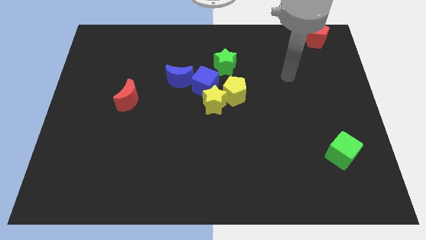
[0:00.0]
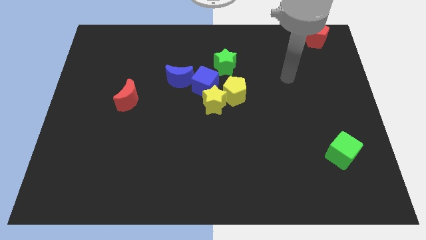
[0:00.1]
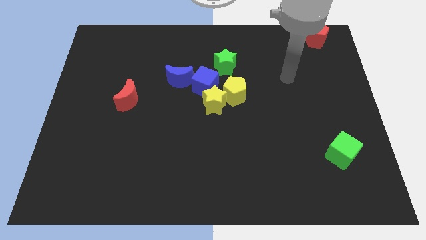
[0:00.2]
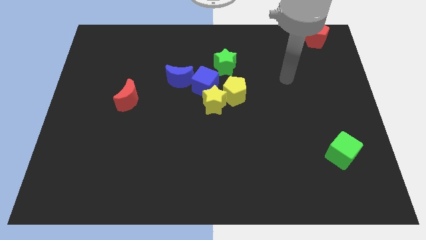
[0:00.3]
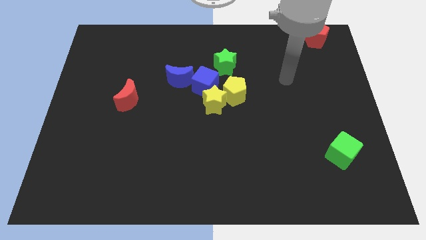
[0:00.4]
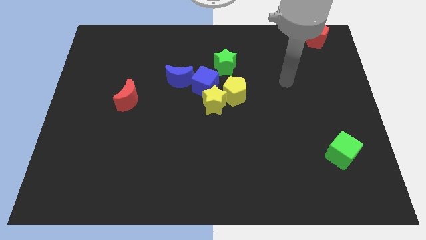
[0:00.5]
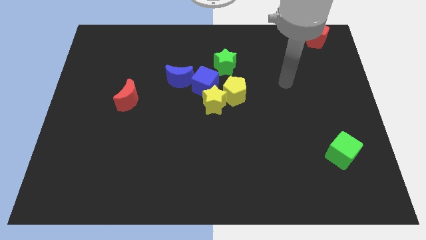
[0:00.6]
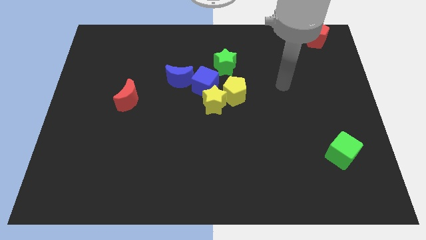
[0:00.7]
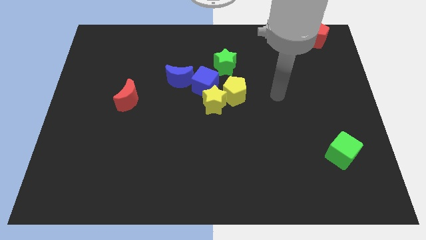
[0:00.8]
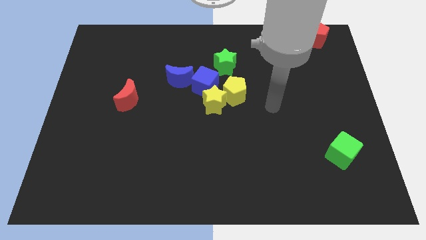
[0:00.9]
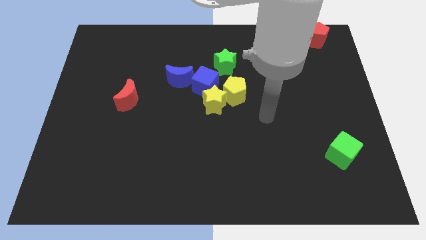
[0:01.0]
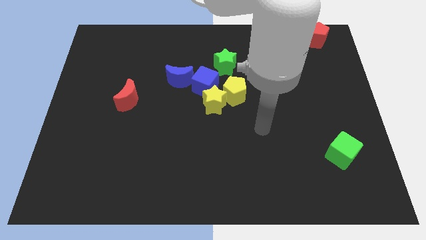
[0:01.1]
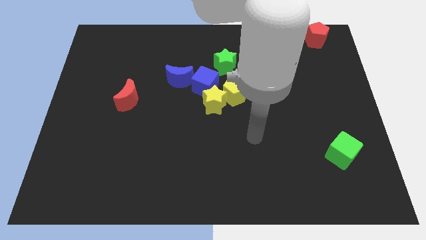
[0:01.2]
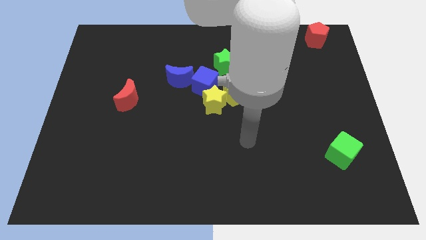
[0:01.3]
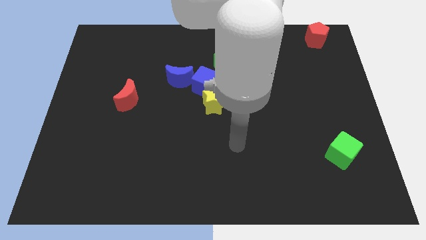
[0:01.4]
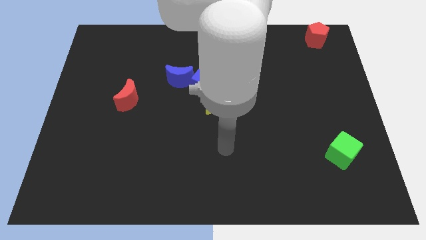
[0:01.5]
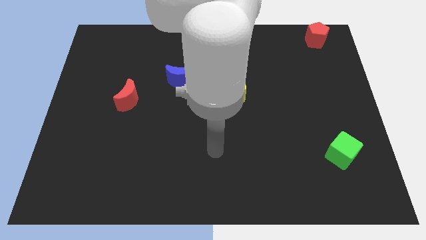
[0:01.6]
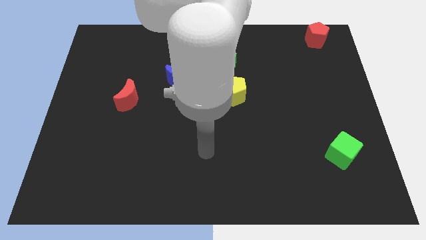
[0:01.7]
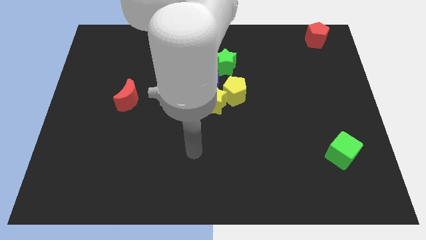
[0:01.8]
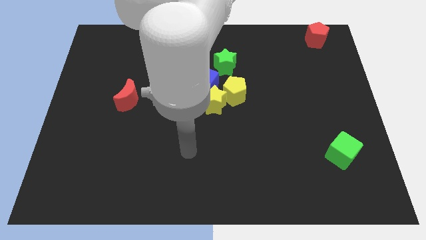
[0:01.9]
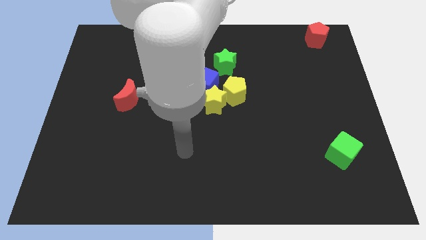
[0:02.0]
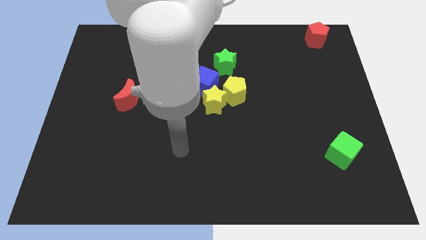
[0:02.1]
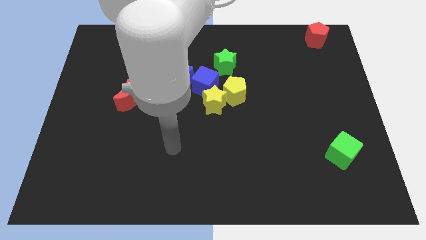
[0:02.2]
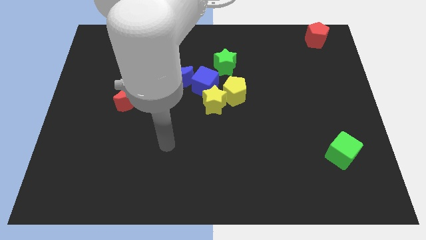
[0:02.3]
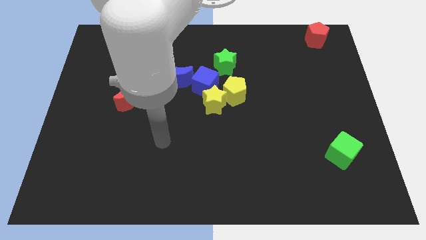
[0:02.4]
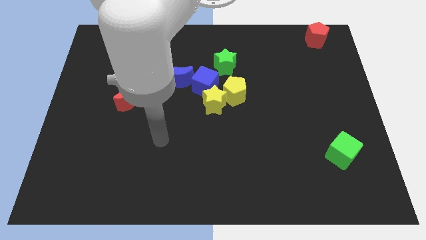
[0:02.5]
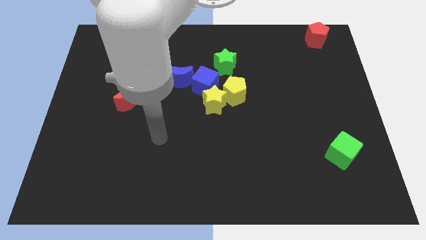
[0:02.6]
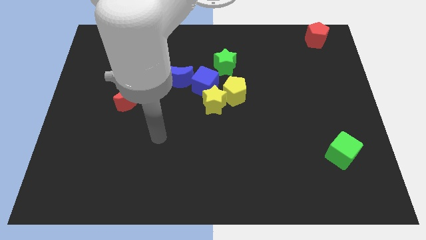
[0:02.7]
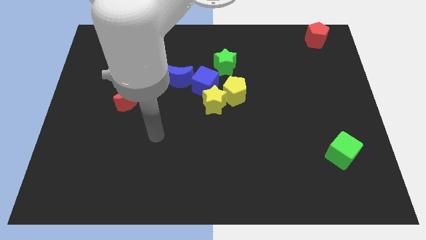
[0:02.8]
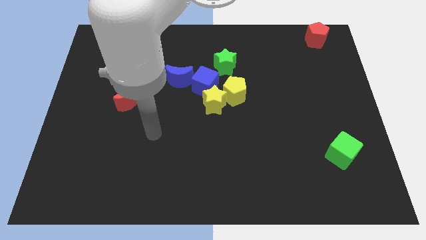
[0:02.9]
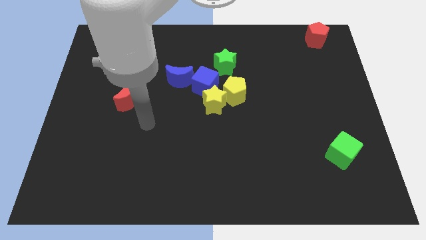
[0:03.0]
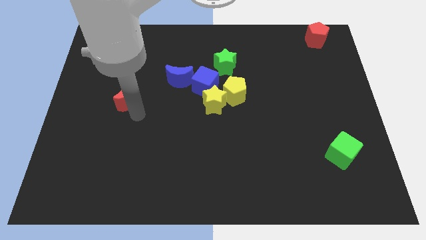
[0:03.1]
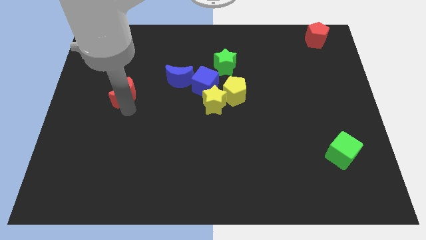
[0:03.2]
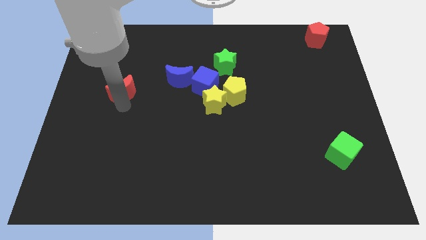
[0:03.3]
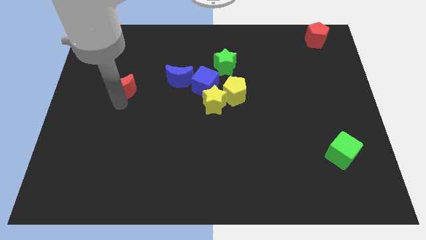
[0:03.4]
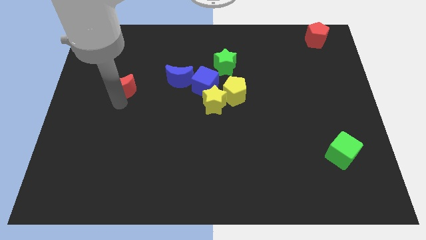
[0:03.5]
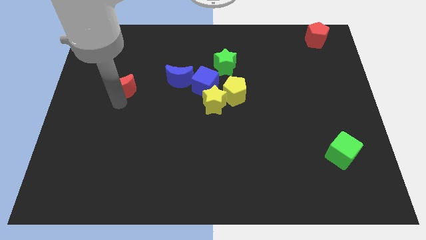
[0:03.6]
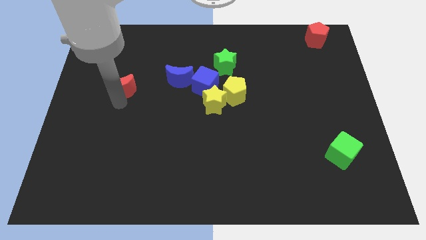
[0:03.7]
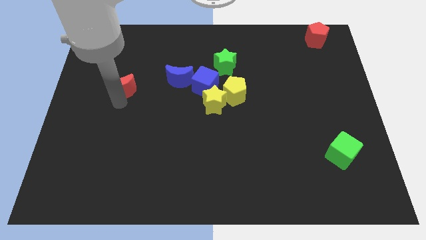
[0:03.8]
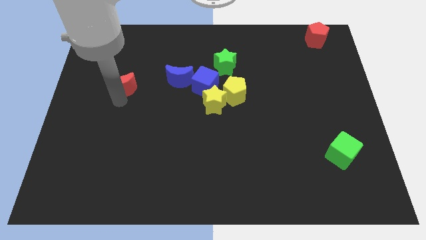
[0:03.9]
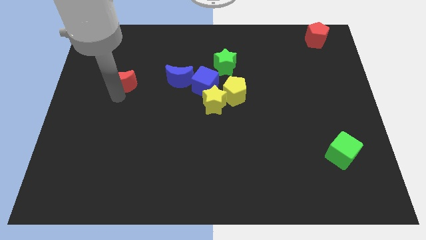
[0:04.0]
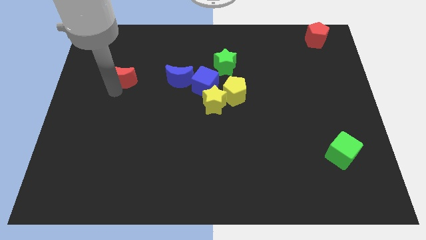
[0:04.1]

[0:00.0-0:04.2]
slightly move the red moon upwards

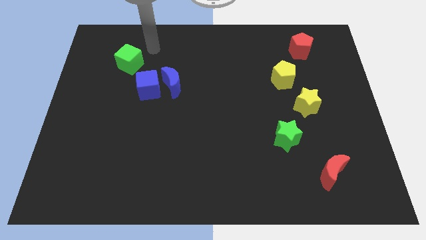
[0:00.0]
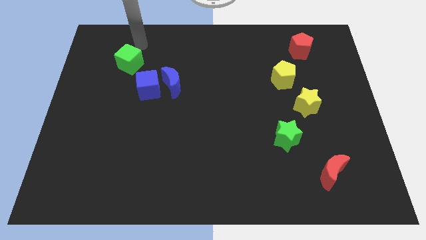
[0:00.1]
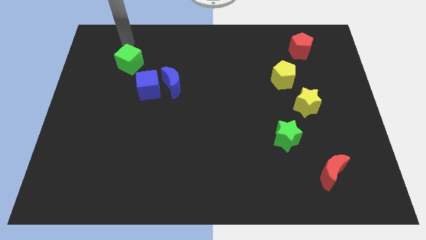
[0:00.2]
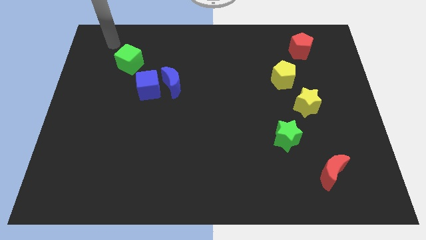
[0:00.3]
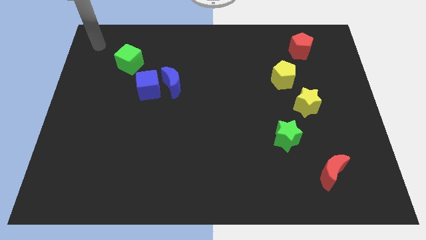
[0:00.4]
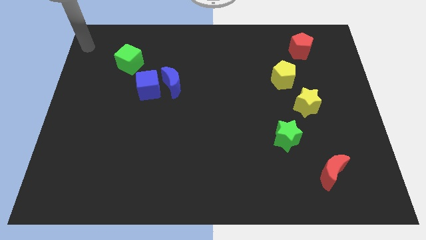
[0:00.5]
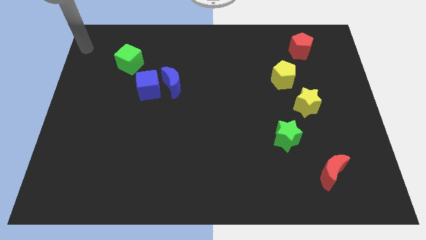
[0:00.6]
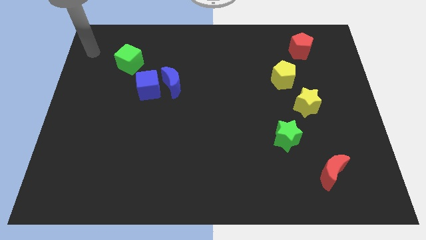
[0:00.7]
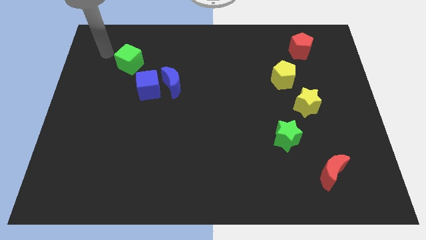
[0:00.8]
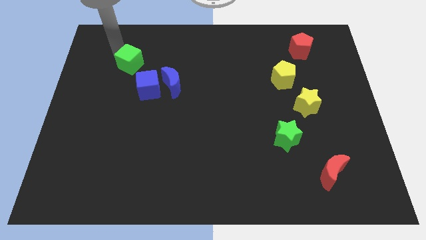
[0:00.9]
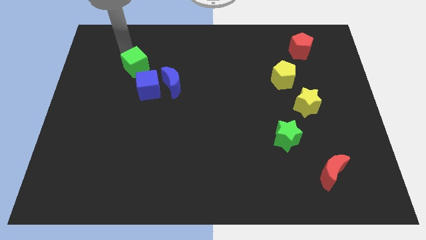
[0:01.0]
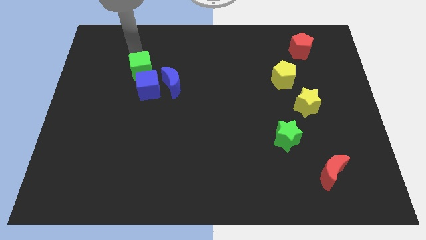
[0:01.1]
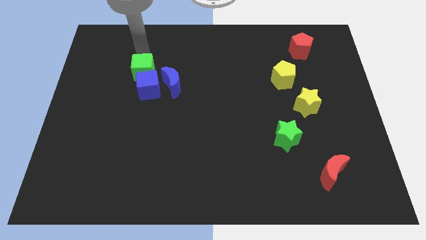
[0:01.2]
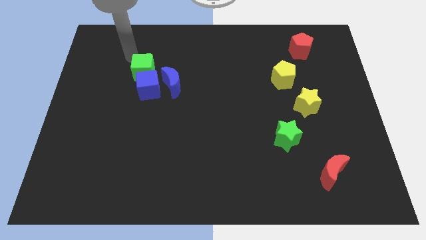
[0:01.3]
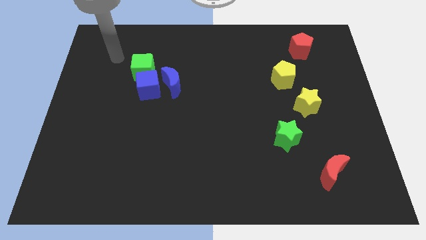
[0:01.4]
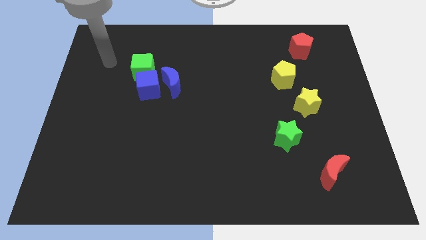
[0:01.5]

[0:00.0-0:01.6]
push the green cube into the blue cube

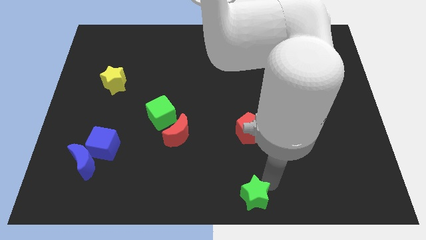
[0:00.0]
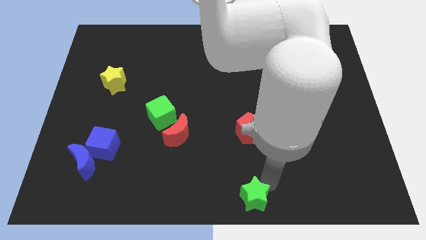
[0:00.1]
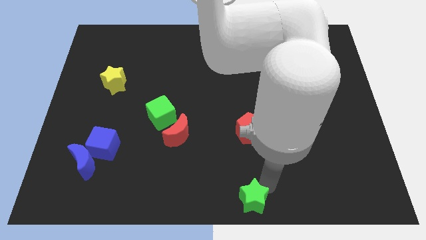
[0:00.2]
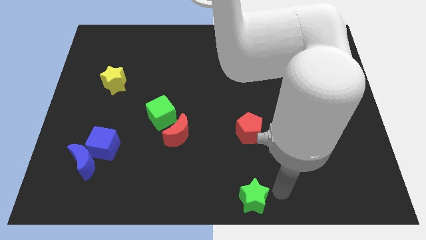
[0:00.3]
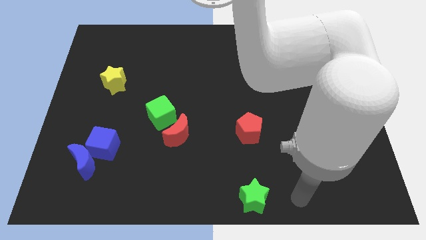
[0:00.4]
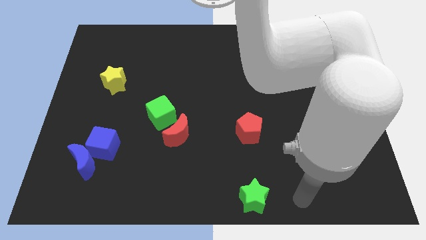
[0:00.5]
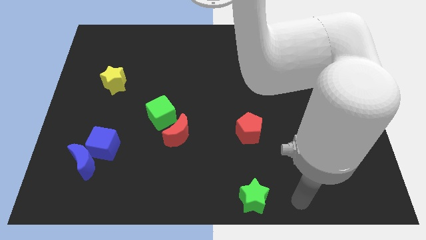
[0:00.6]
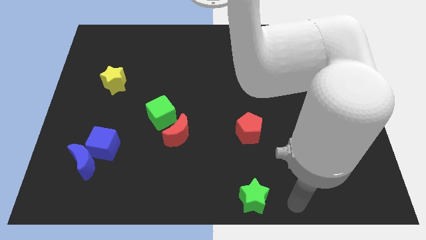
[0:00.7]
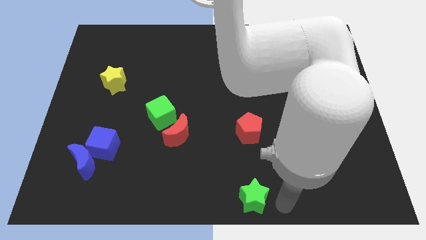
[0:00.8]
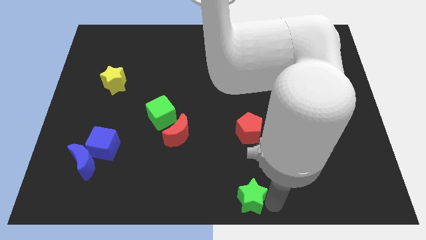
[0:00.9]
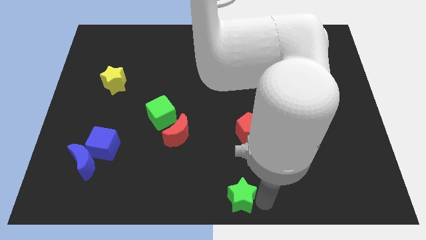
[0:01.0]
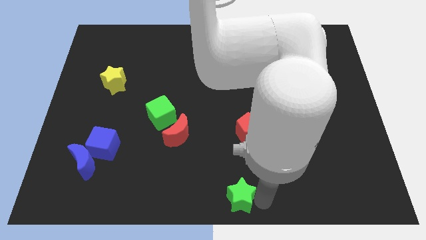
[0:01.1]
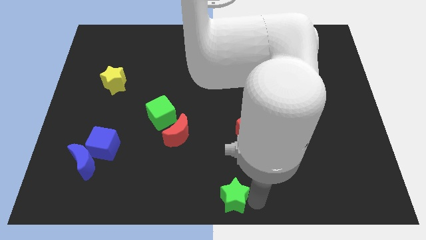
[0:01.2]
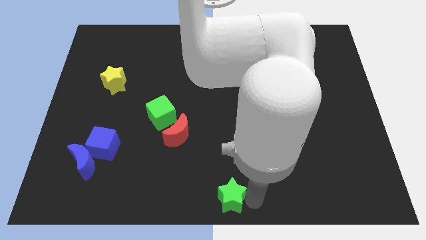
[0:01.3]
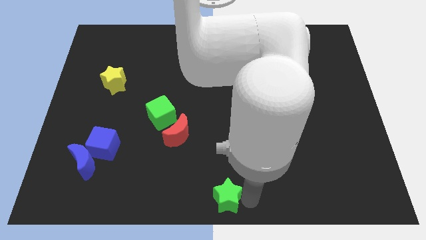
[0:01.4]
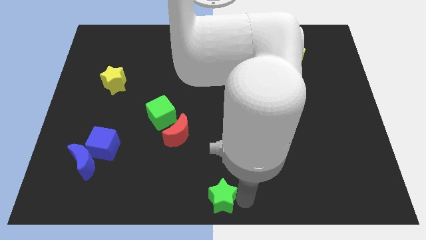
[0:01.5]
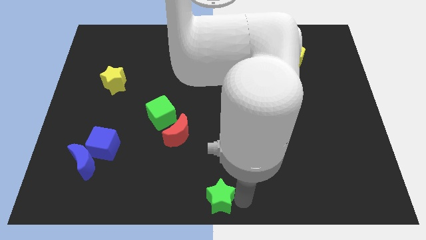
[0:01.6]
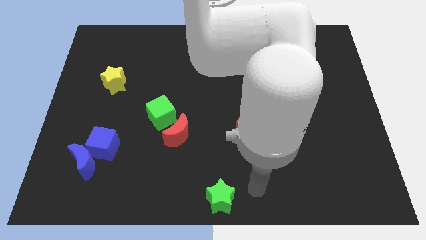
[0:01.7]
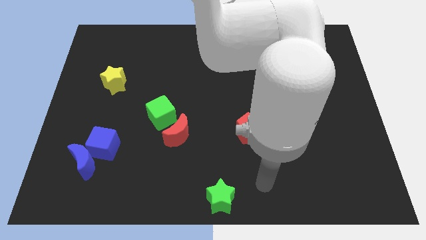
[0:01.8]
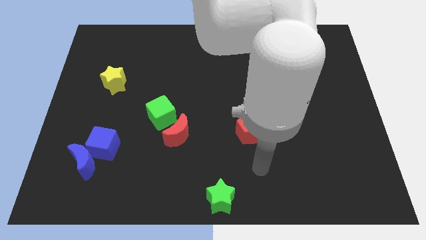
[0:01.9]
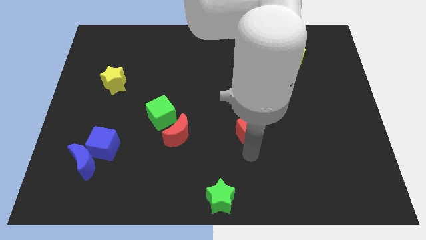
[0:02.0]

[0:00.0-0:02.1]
place the green star at the bottom center of the board

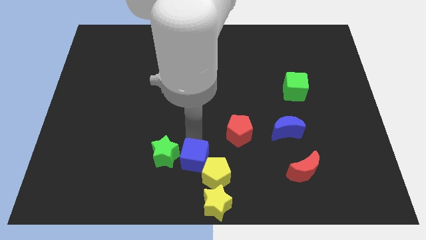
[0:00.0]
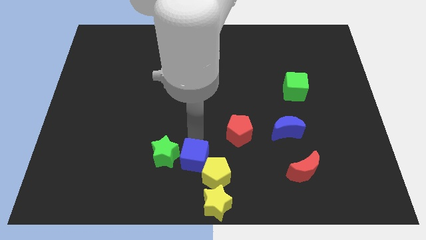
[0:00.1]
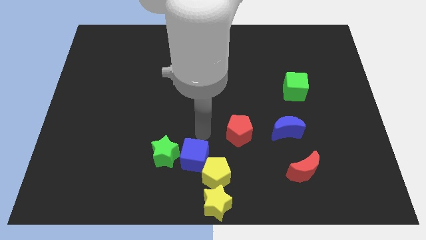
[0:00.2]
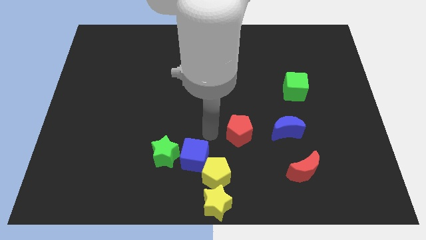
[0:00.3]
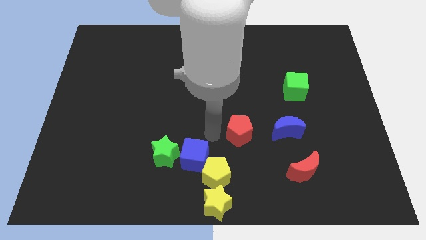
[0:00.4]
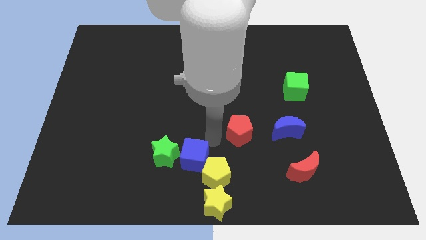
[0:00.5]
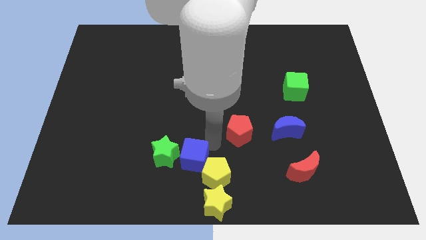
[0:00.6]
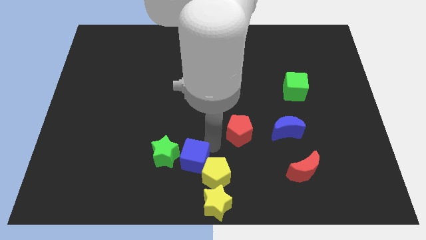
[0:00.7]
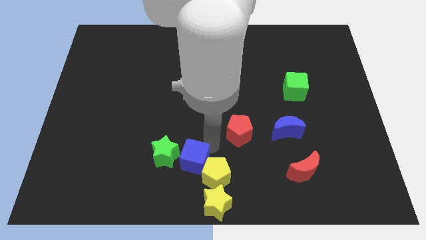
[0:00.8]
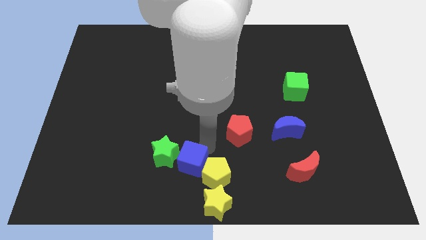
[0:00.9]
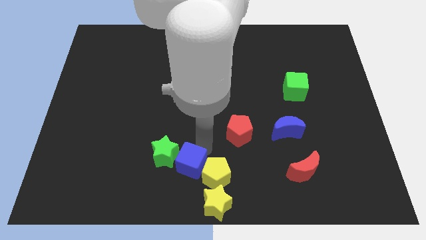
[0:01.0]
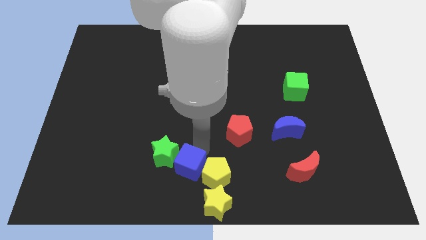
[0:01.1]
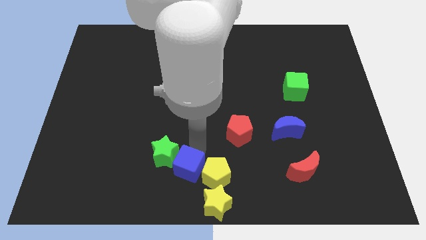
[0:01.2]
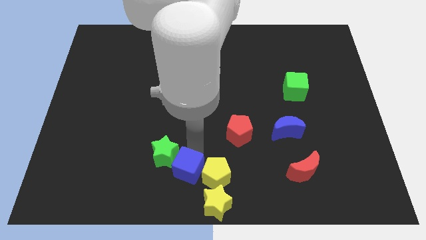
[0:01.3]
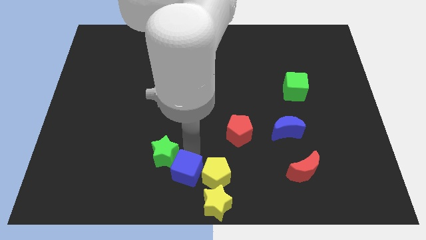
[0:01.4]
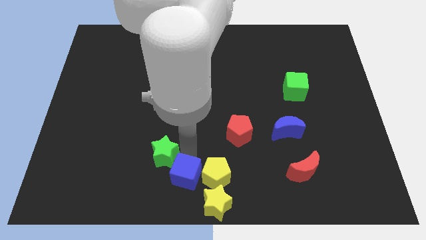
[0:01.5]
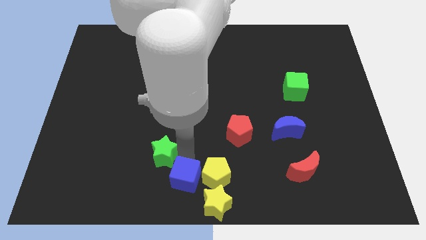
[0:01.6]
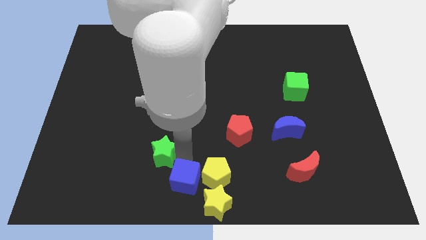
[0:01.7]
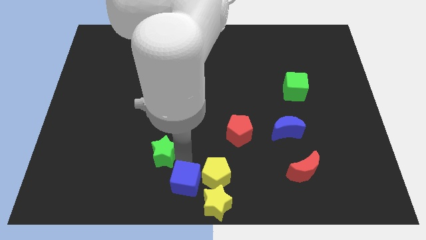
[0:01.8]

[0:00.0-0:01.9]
separate the blue cube from green star
